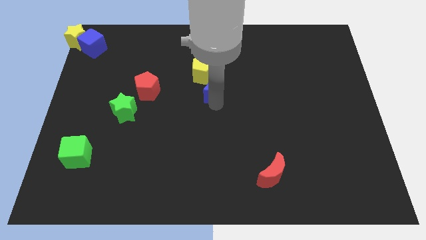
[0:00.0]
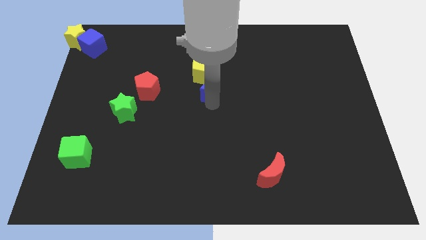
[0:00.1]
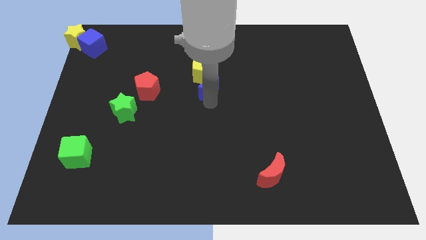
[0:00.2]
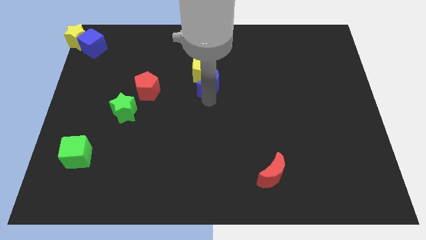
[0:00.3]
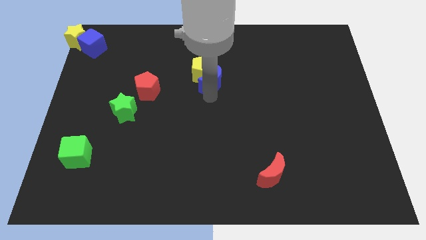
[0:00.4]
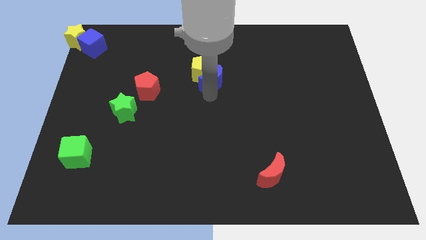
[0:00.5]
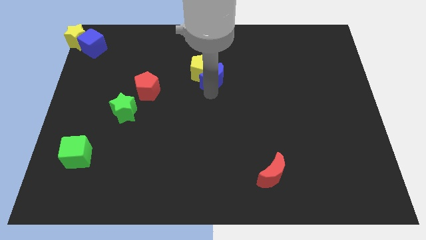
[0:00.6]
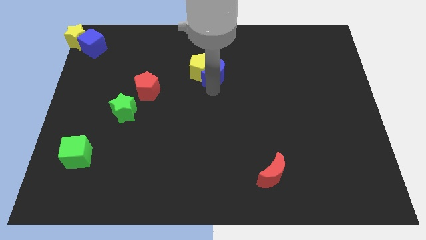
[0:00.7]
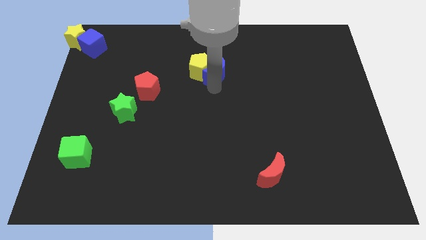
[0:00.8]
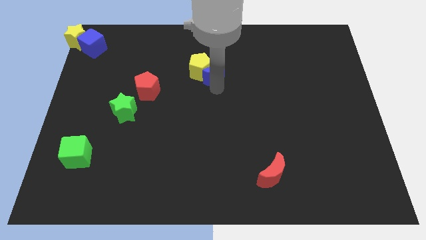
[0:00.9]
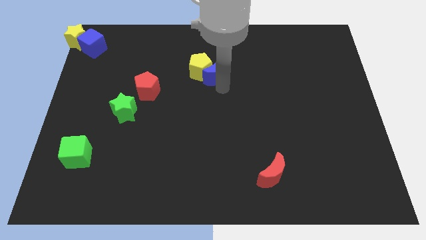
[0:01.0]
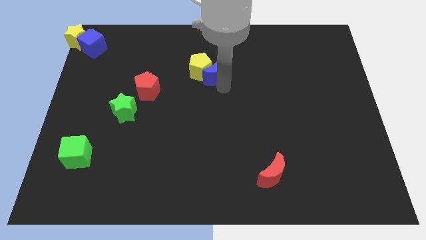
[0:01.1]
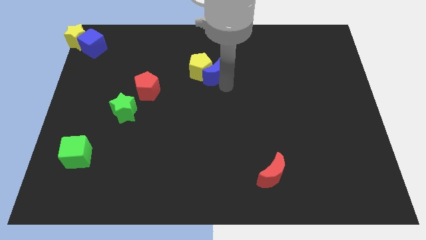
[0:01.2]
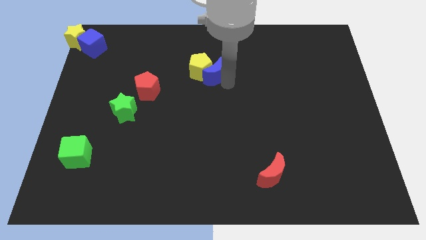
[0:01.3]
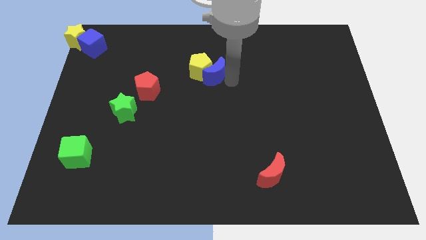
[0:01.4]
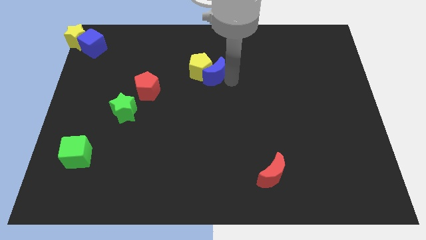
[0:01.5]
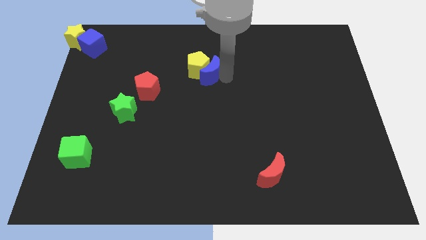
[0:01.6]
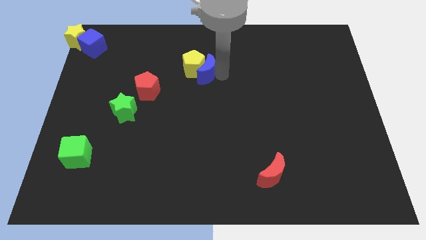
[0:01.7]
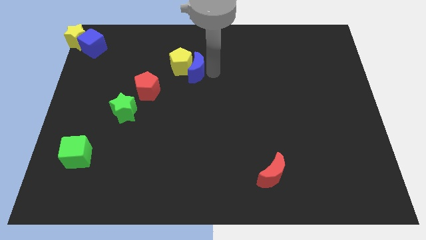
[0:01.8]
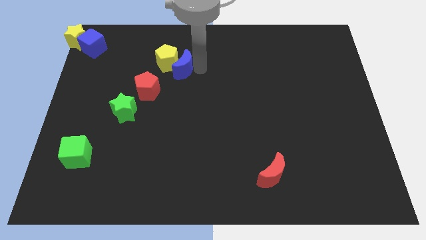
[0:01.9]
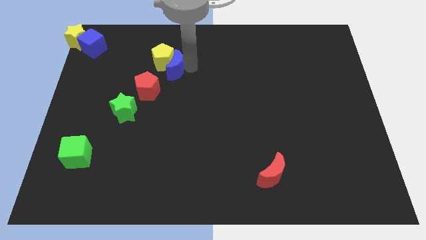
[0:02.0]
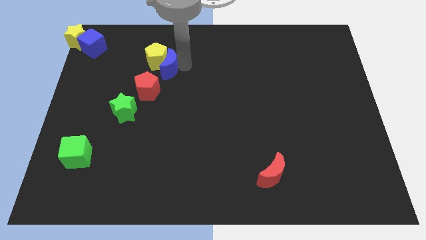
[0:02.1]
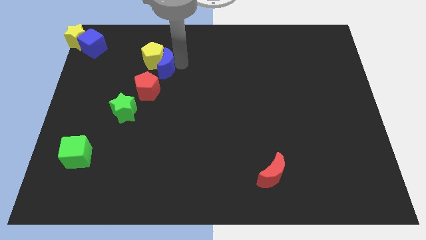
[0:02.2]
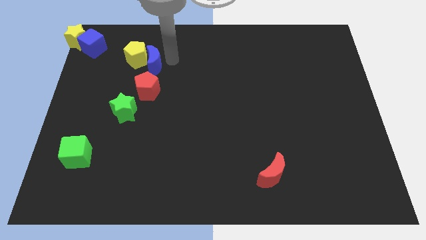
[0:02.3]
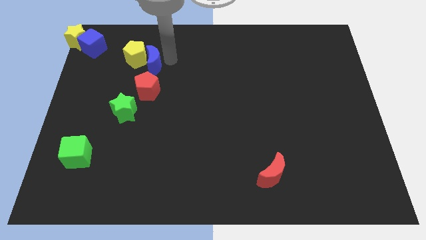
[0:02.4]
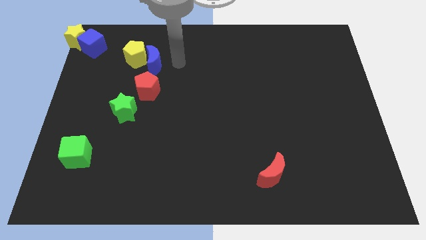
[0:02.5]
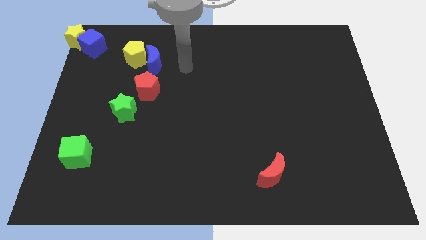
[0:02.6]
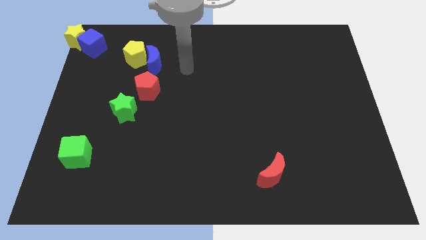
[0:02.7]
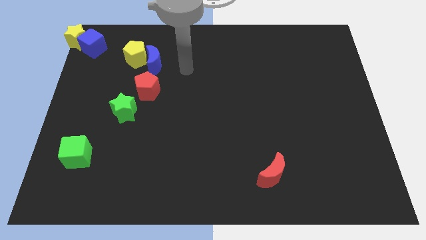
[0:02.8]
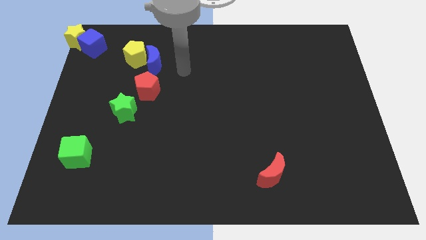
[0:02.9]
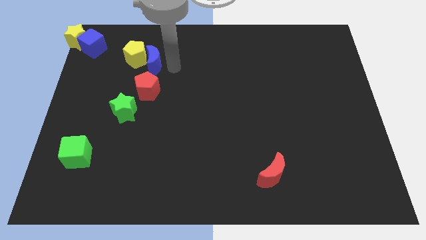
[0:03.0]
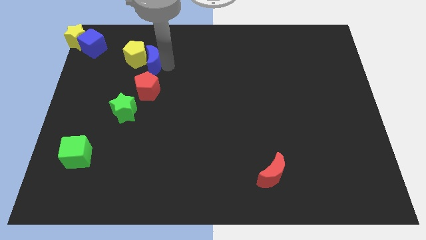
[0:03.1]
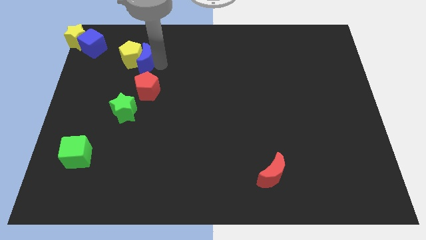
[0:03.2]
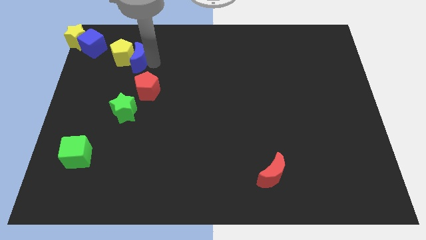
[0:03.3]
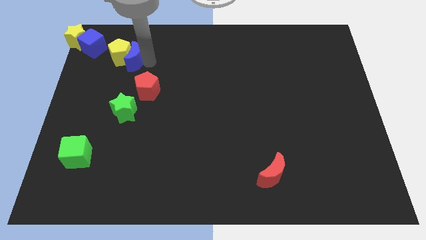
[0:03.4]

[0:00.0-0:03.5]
push the blue crescent along with the yellow pentagon to the top left of the red pentagon

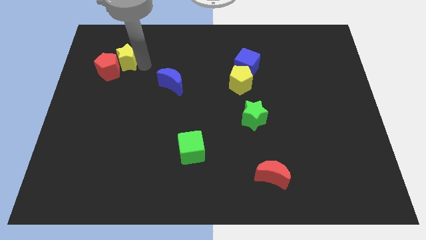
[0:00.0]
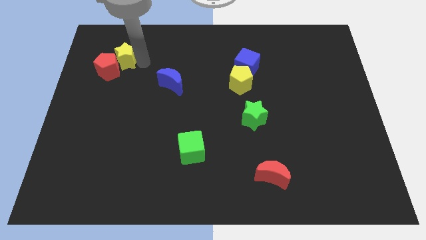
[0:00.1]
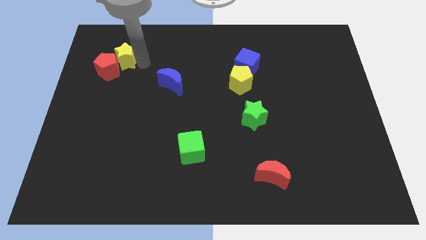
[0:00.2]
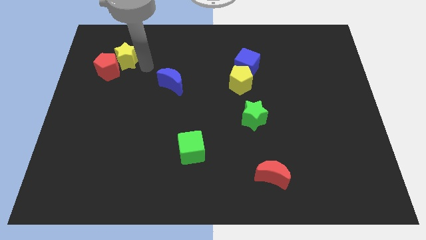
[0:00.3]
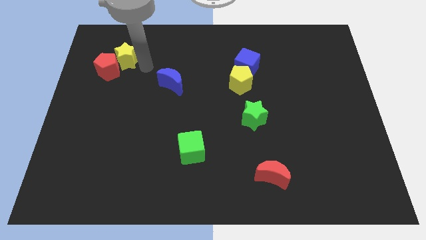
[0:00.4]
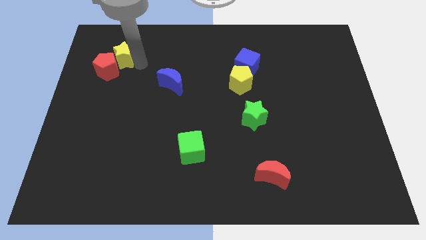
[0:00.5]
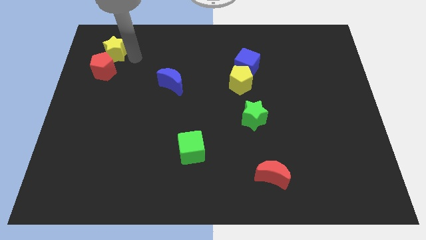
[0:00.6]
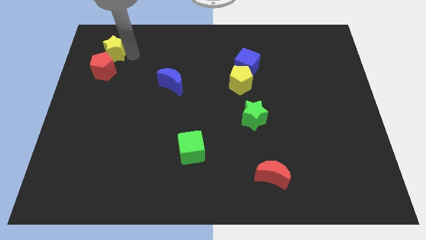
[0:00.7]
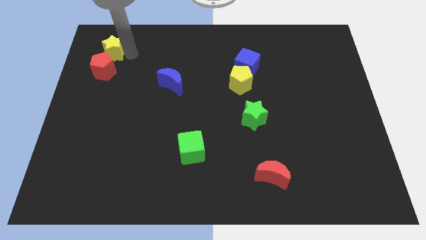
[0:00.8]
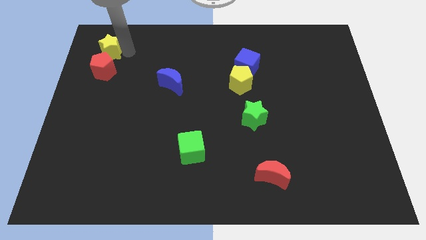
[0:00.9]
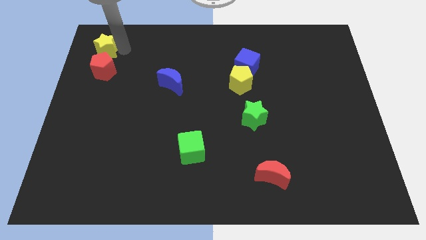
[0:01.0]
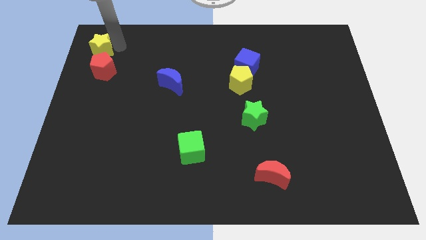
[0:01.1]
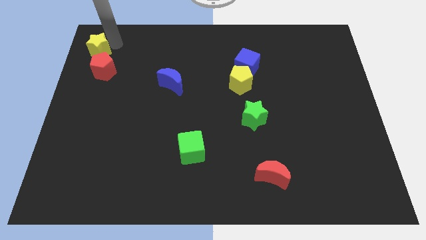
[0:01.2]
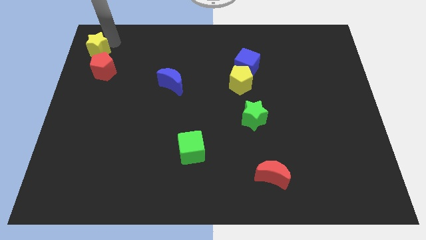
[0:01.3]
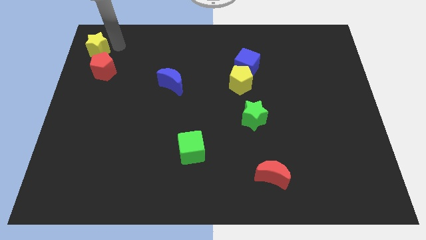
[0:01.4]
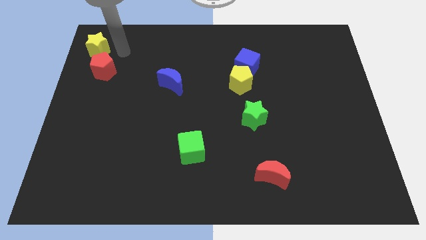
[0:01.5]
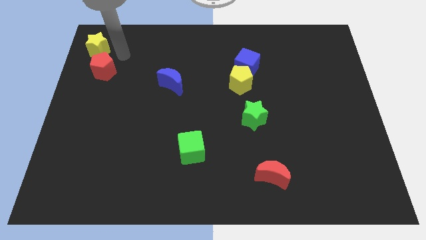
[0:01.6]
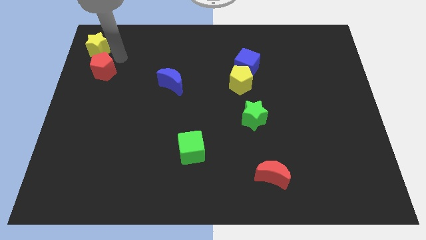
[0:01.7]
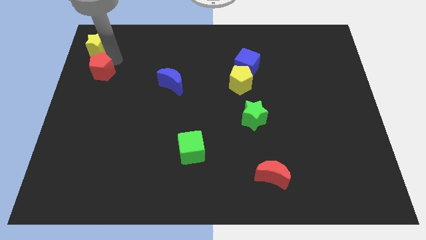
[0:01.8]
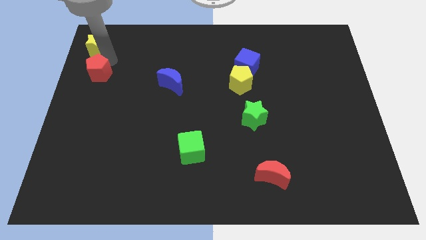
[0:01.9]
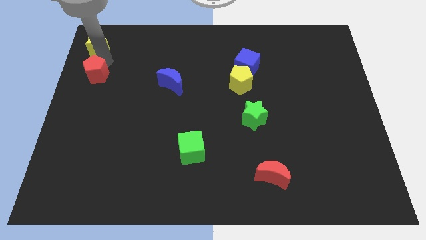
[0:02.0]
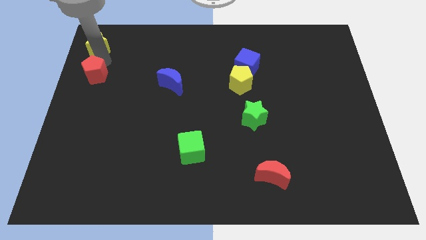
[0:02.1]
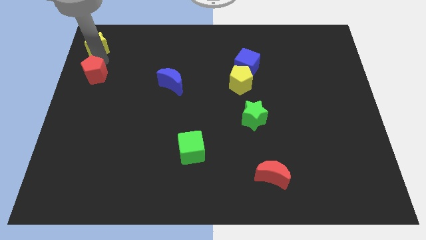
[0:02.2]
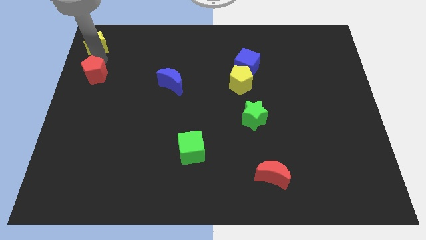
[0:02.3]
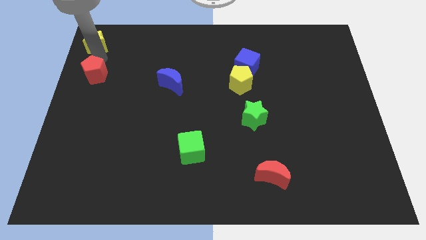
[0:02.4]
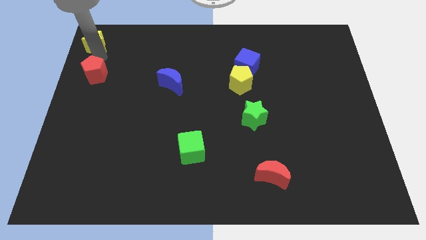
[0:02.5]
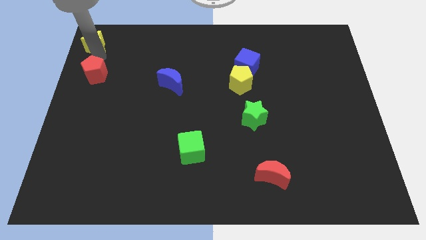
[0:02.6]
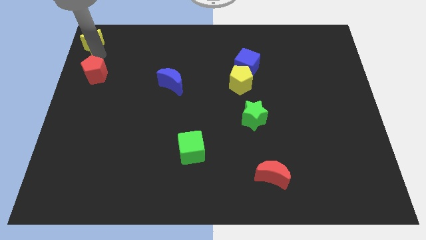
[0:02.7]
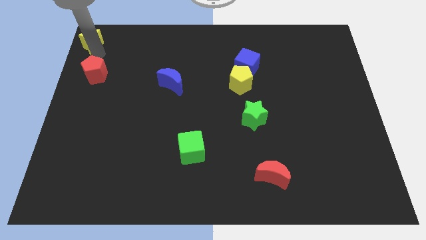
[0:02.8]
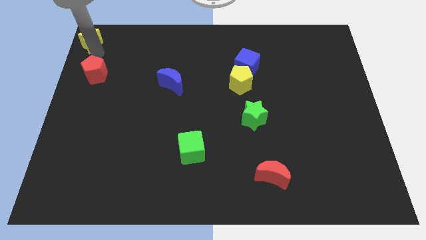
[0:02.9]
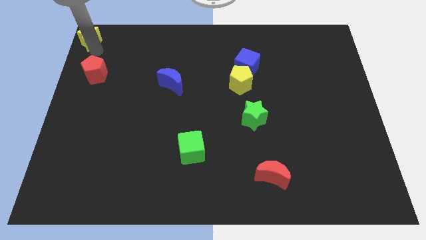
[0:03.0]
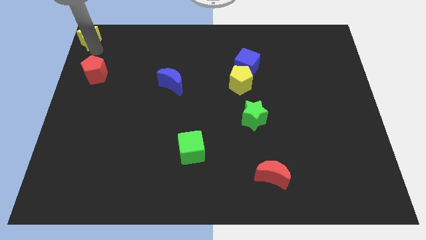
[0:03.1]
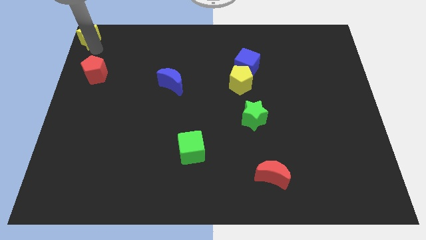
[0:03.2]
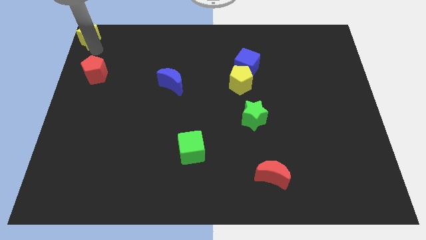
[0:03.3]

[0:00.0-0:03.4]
move the yellow star on the top left corner of the board

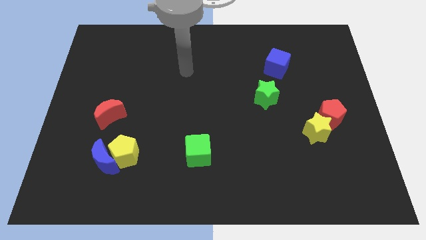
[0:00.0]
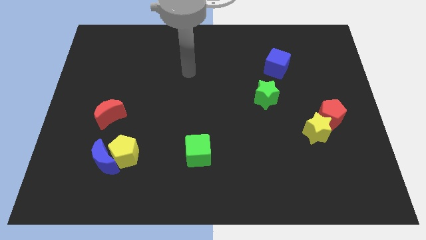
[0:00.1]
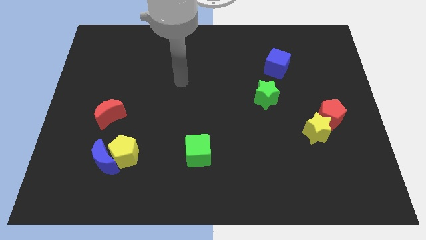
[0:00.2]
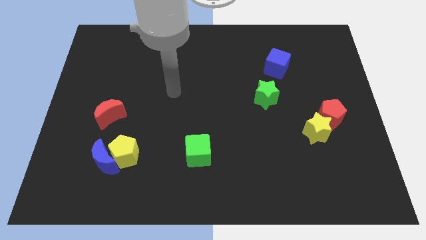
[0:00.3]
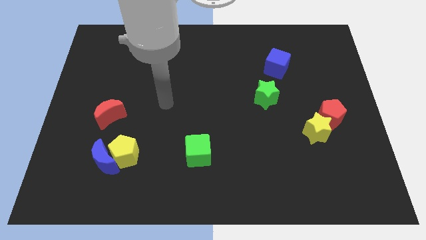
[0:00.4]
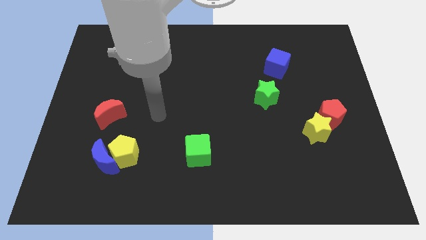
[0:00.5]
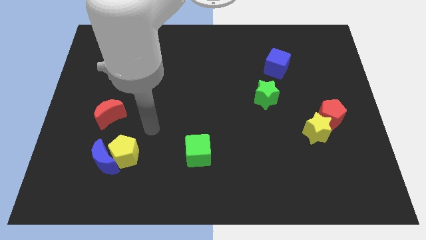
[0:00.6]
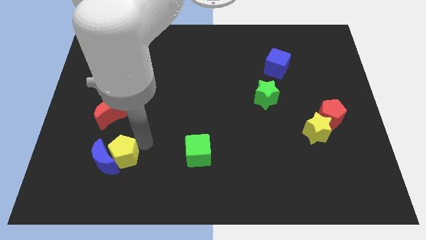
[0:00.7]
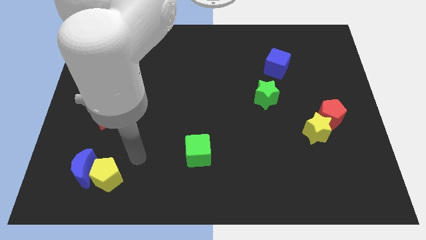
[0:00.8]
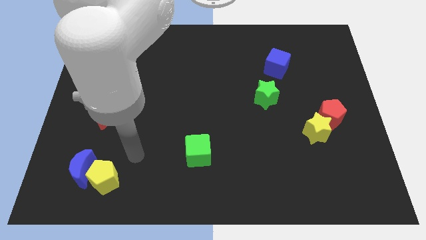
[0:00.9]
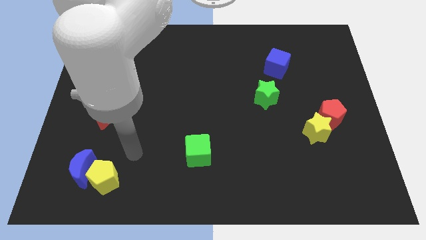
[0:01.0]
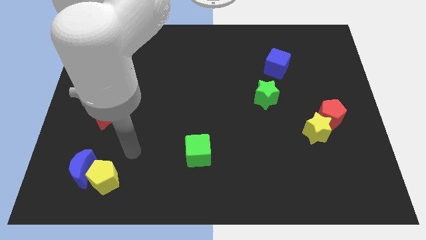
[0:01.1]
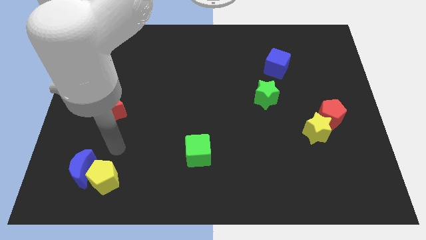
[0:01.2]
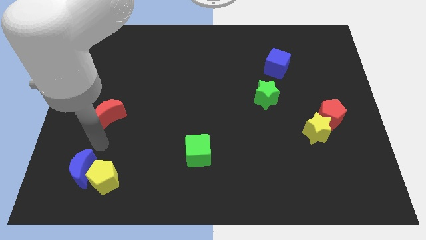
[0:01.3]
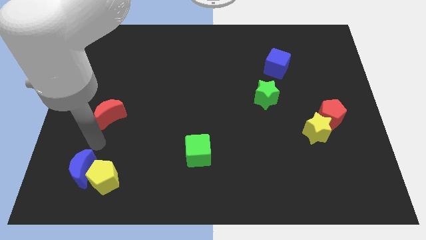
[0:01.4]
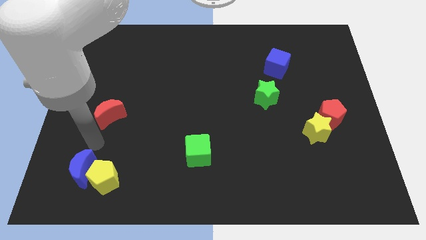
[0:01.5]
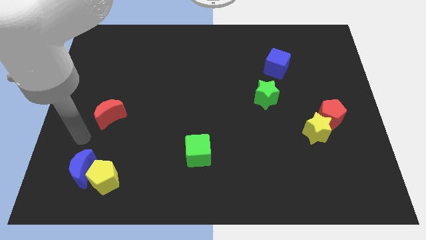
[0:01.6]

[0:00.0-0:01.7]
push the yellow pentagon and the blue moon towards the bottom of the board

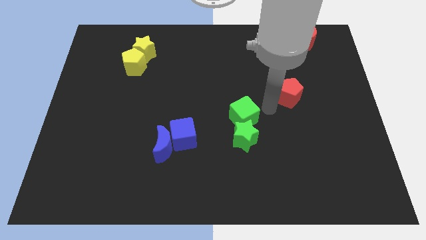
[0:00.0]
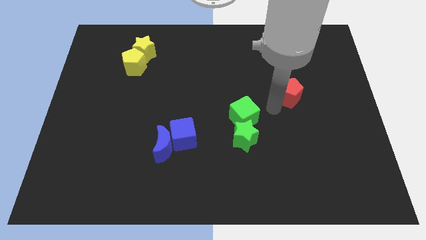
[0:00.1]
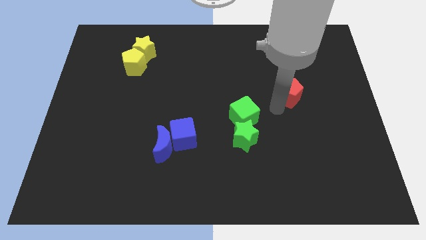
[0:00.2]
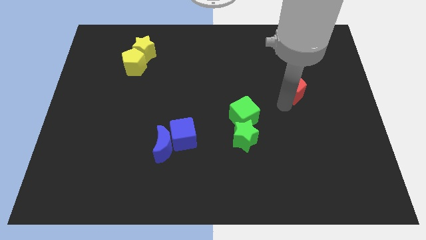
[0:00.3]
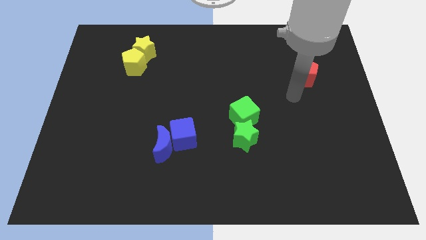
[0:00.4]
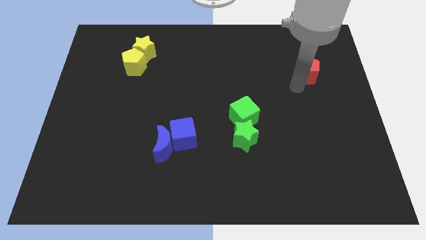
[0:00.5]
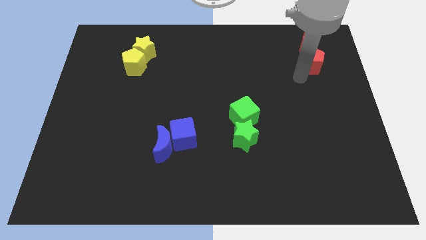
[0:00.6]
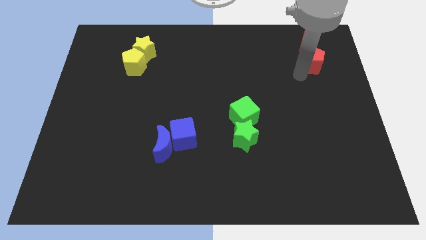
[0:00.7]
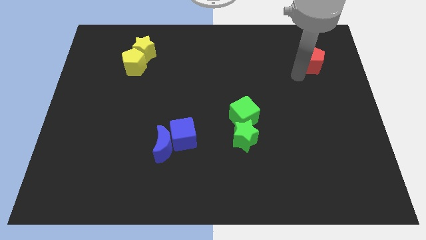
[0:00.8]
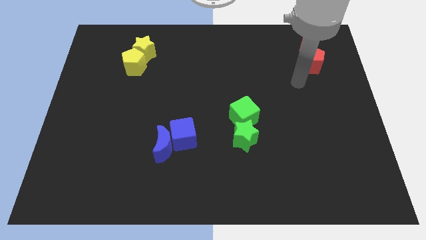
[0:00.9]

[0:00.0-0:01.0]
place red pentagon to the bottom of red moon
